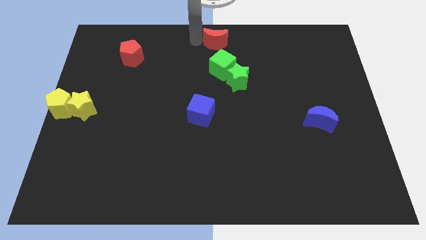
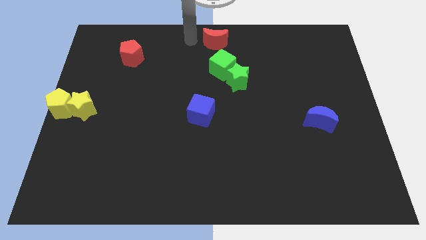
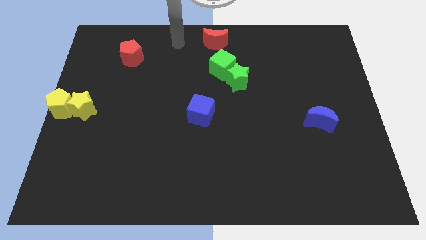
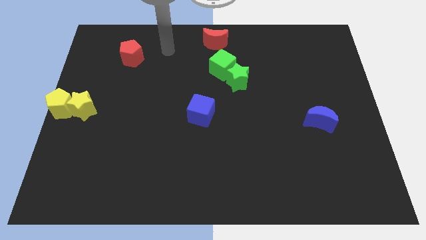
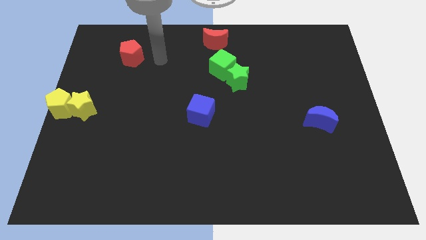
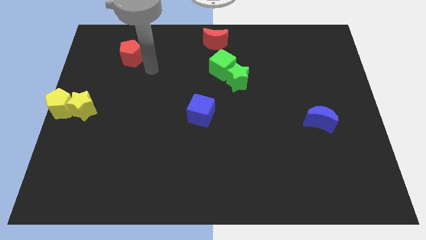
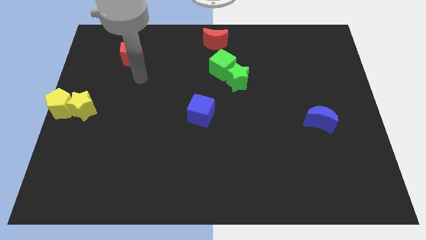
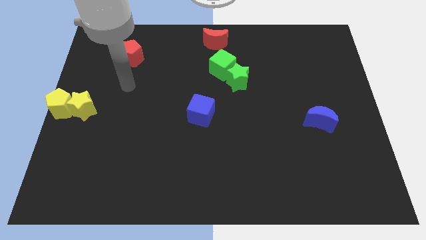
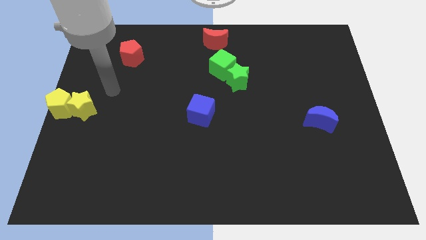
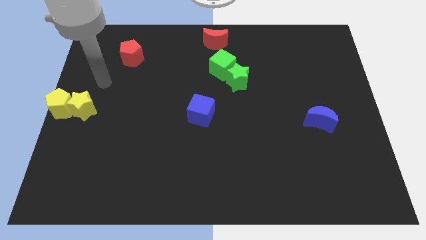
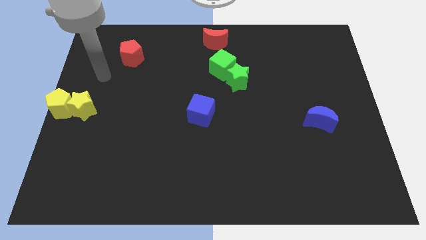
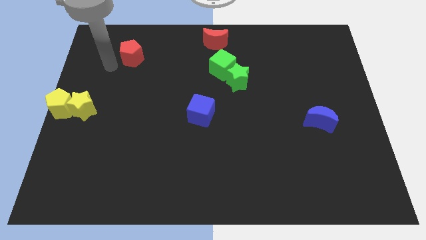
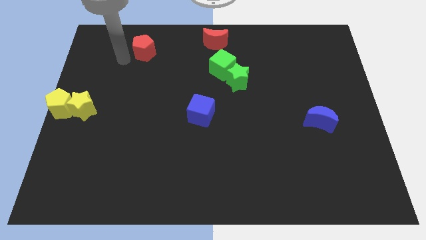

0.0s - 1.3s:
move your arm to the left of the red pentagon

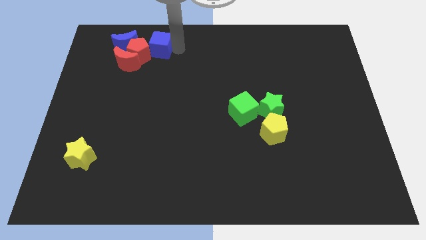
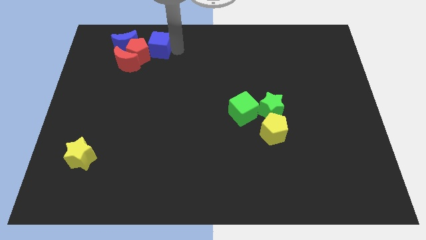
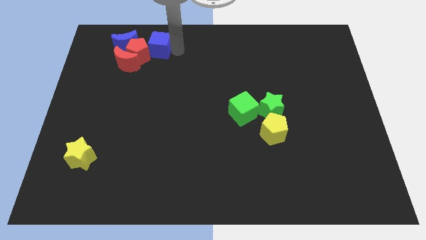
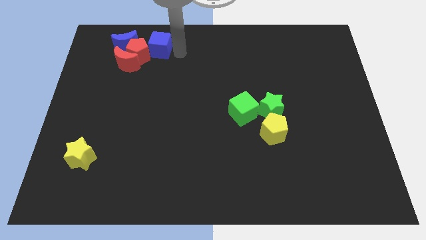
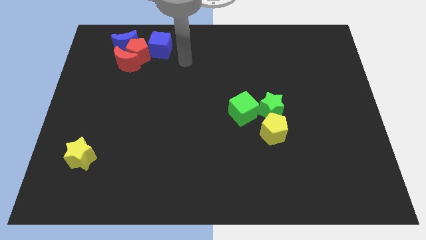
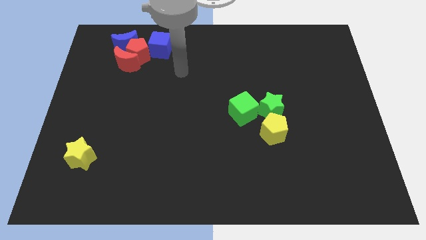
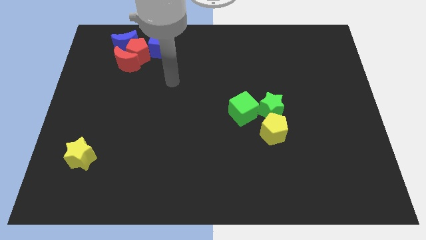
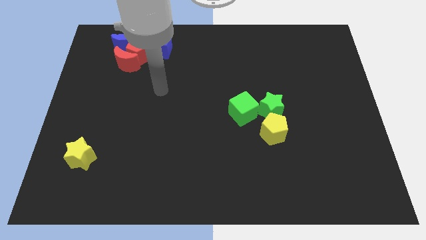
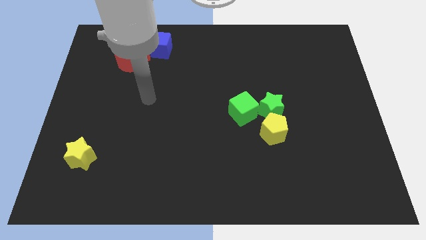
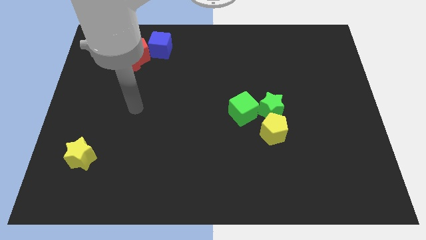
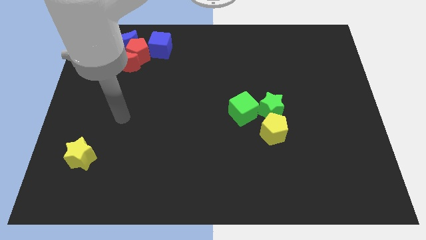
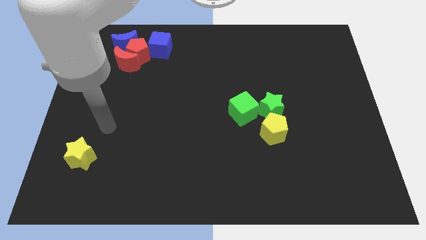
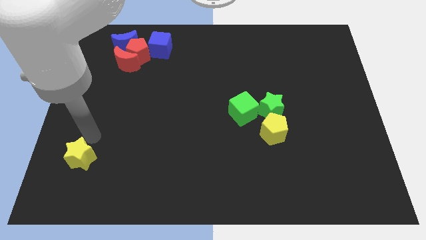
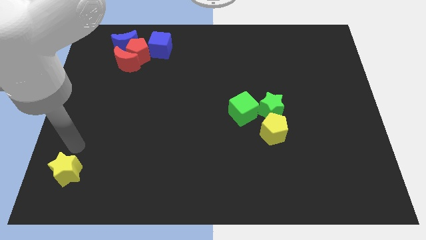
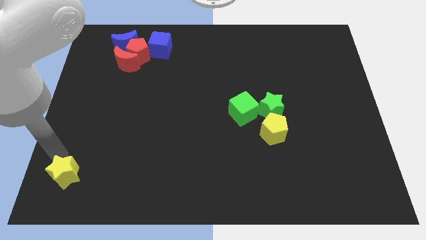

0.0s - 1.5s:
move your arm towards the yellow star

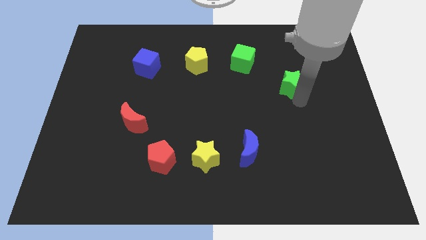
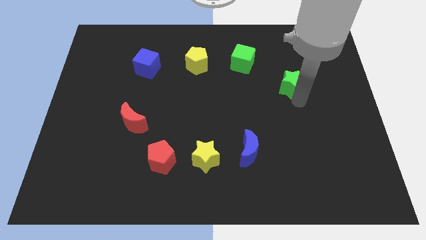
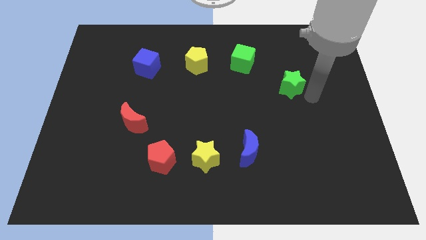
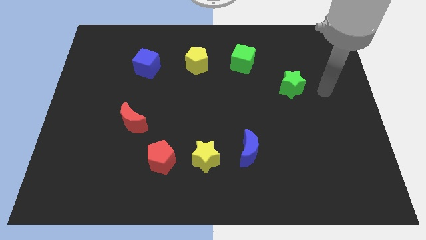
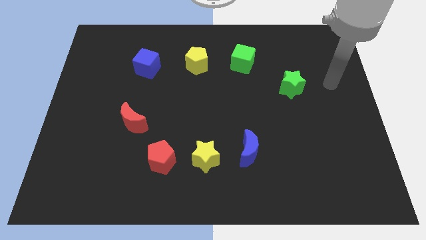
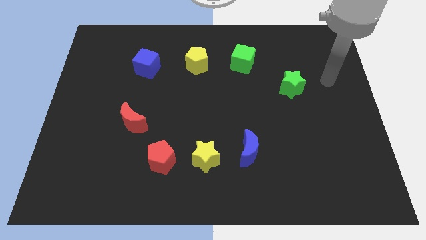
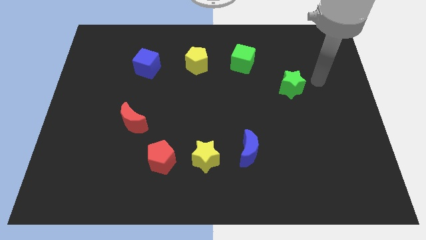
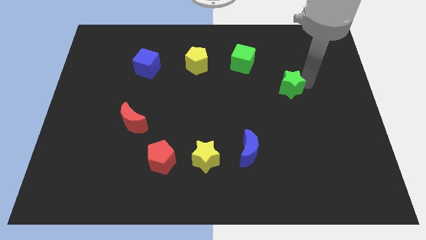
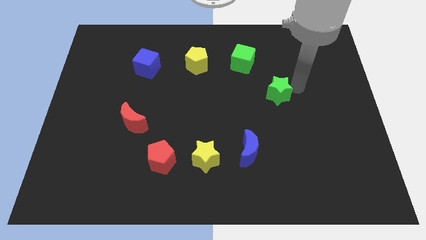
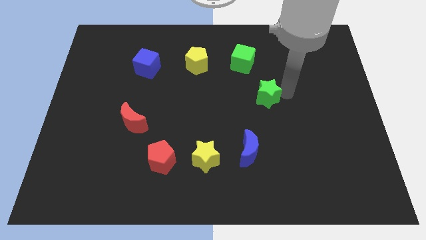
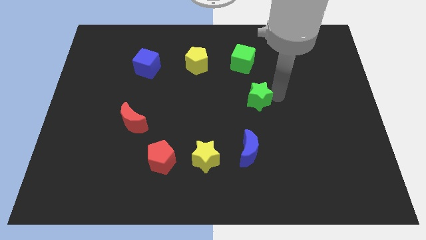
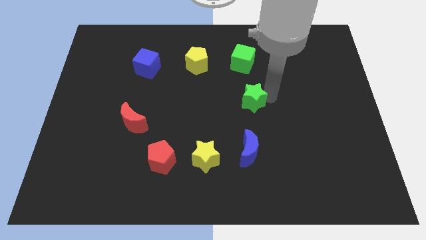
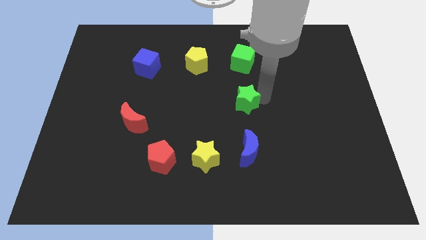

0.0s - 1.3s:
put the green star below green cube

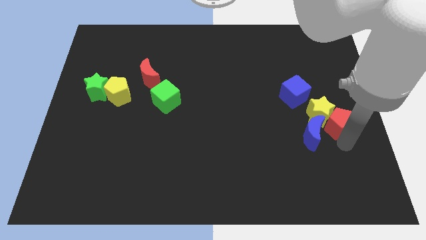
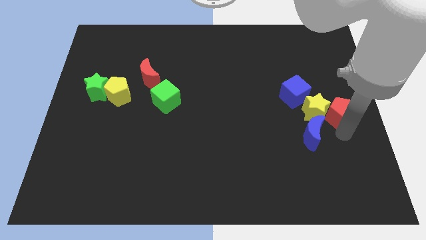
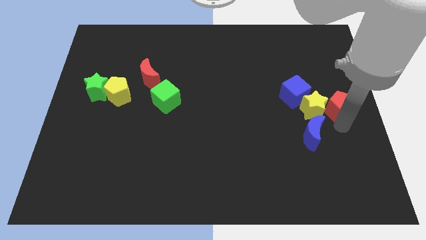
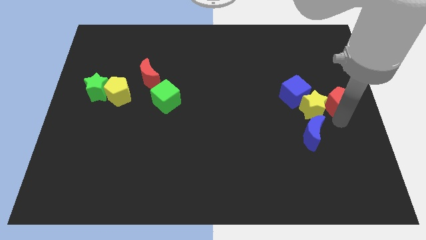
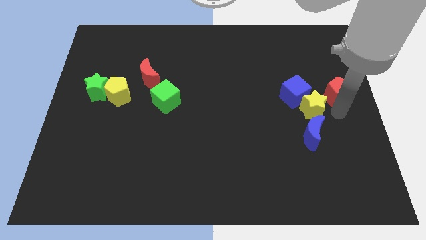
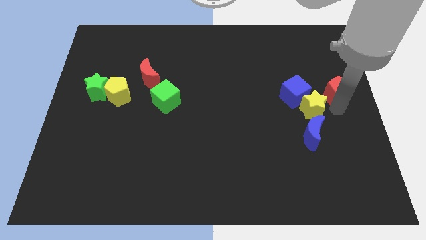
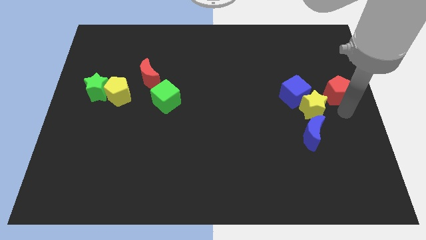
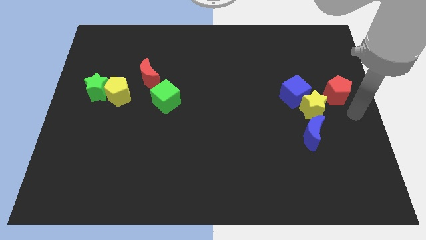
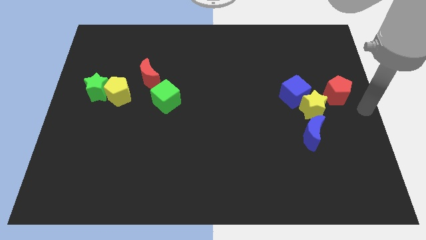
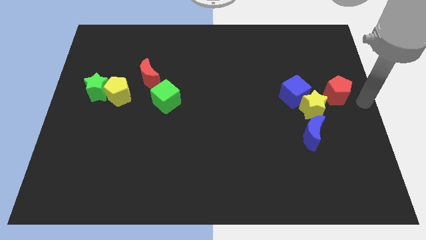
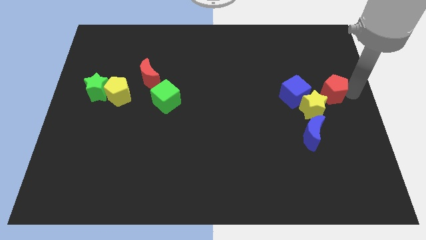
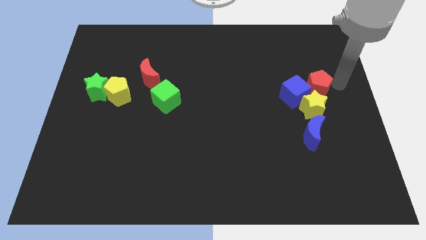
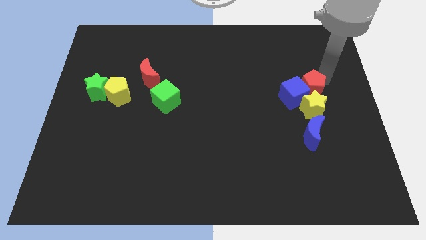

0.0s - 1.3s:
push the red pentagon into the right side of the blue cube

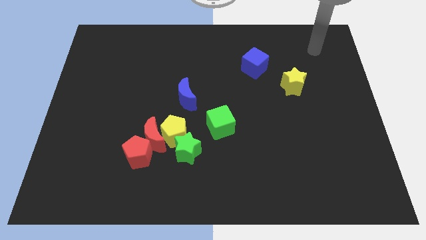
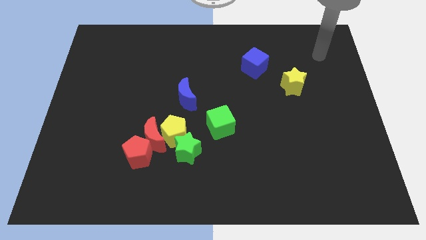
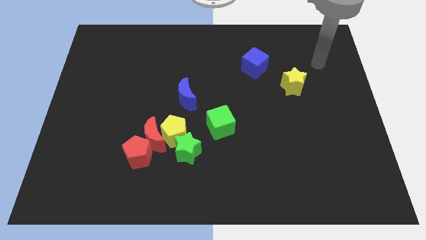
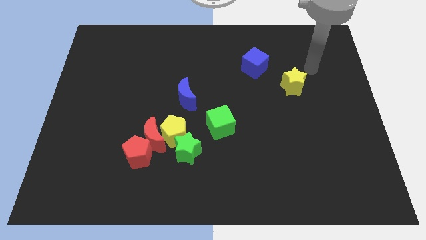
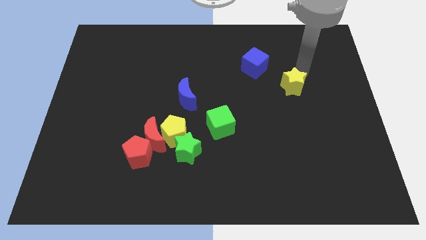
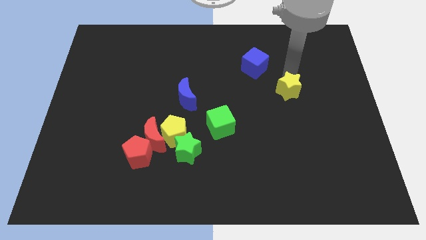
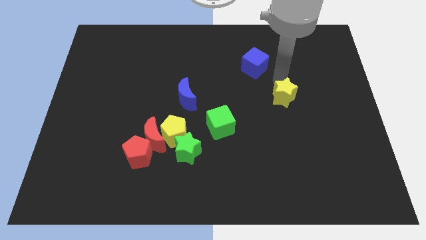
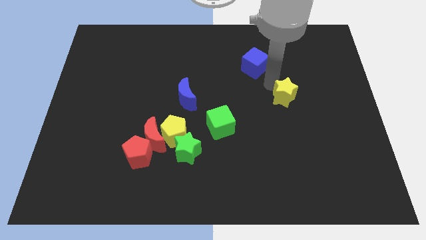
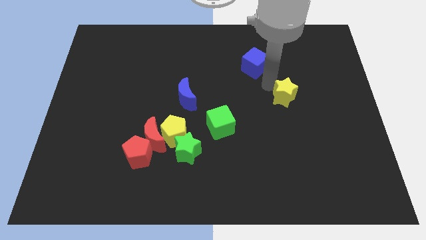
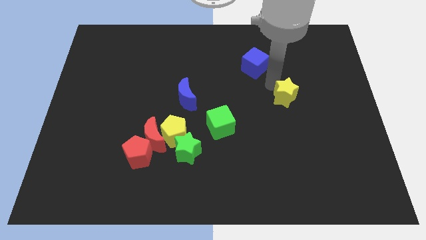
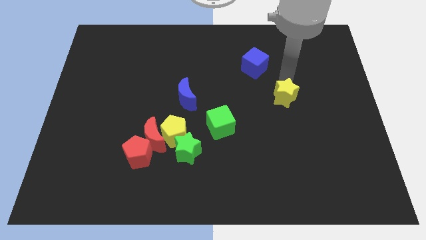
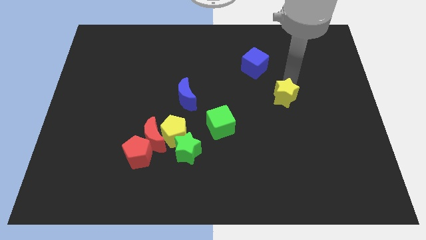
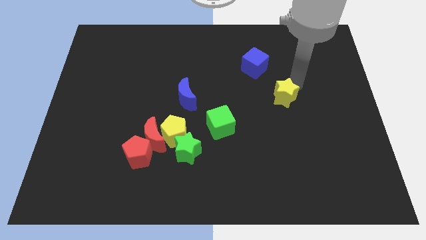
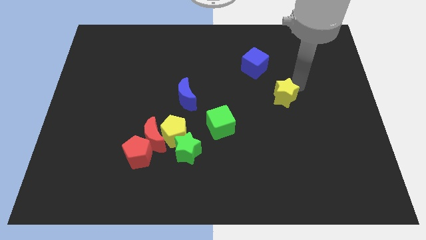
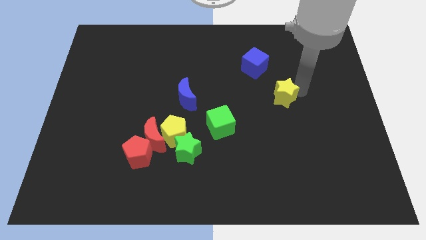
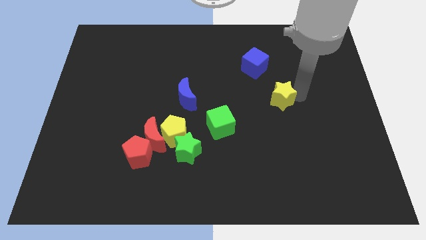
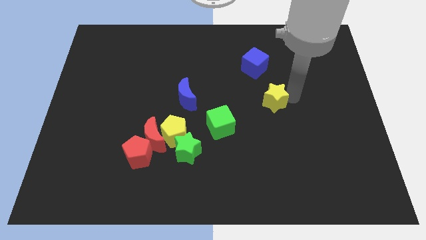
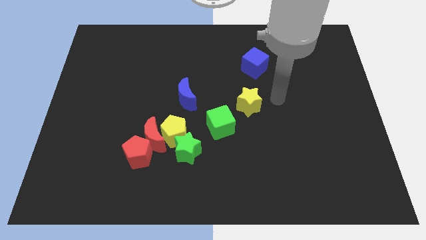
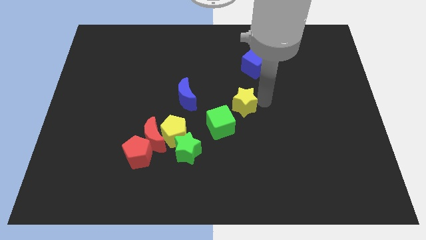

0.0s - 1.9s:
push the yellow star to the right of the green cube

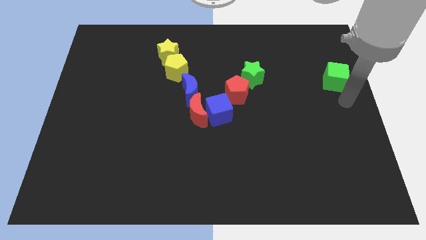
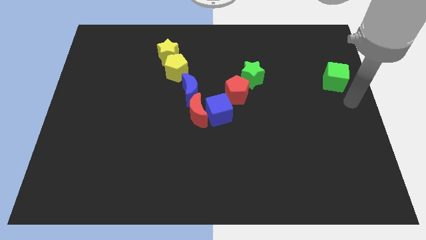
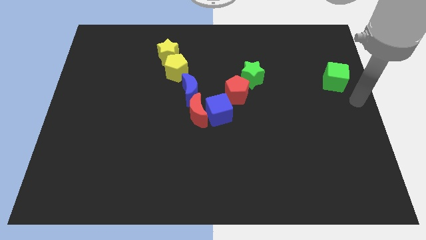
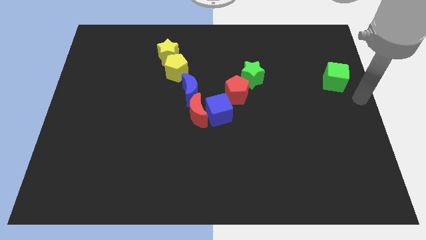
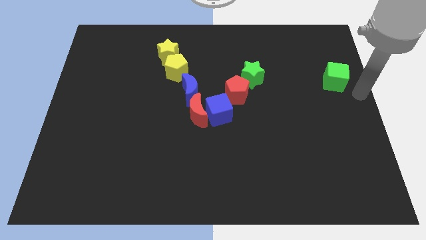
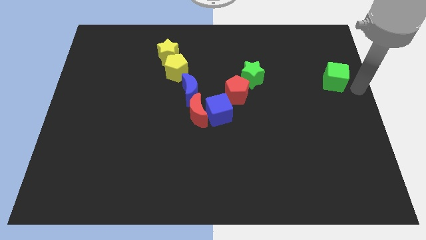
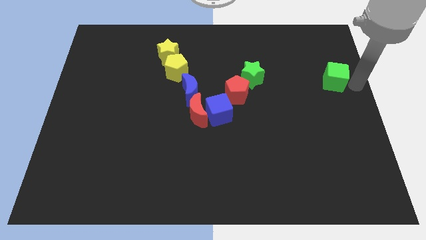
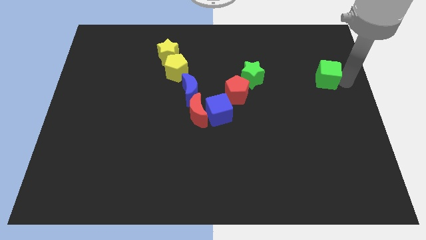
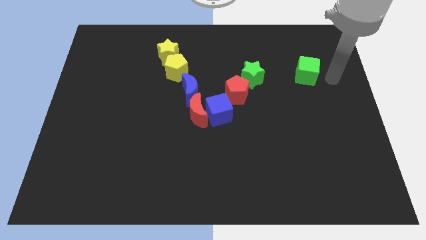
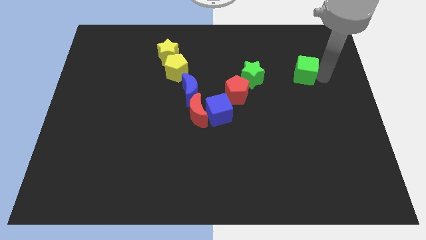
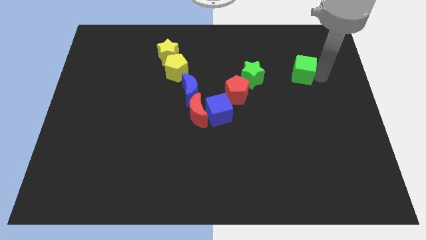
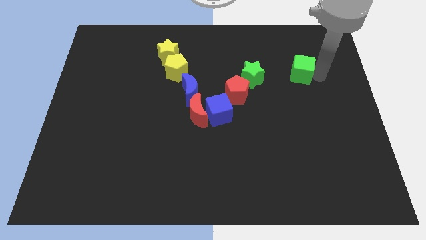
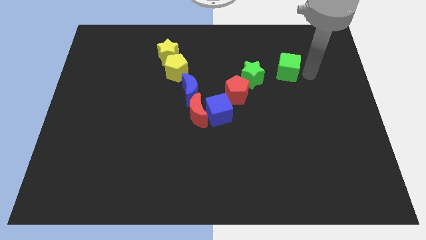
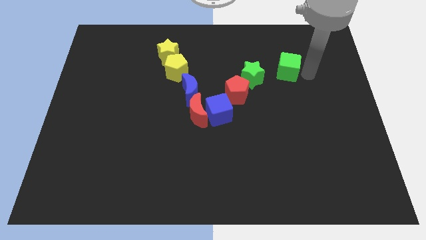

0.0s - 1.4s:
push the green cube towards the green star
